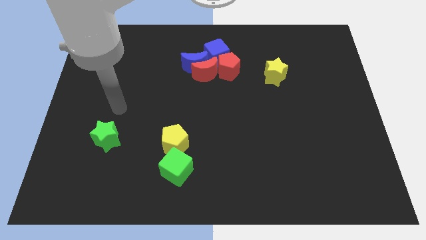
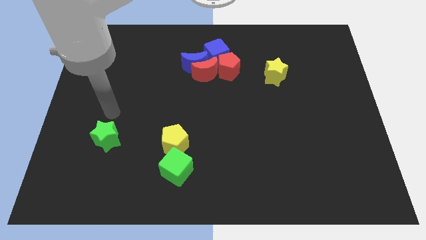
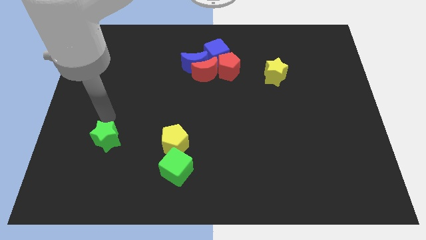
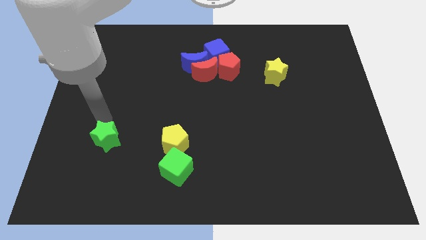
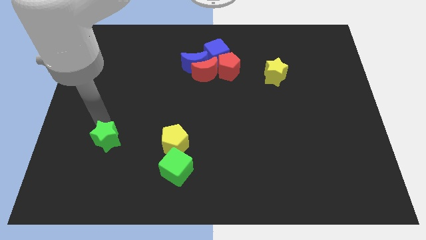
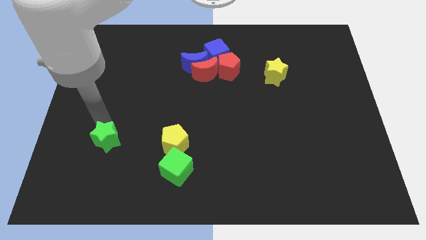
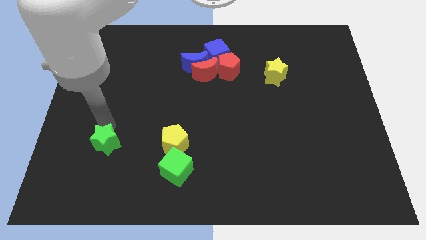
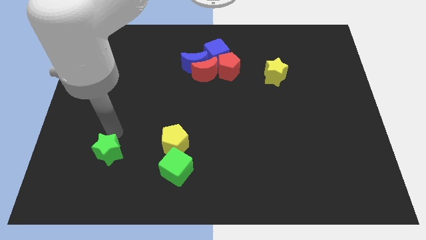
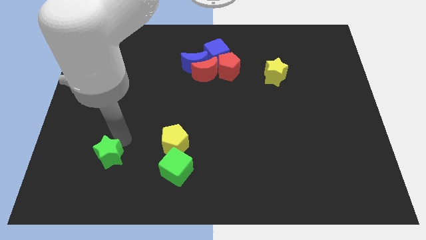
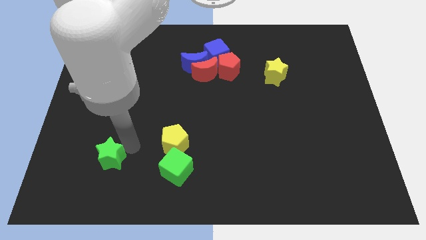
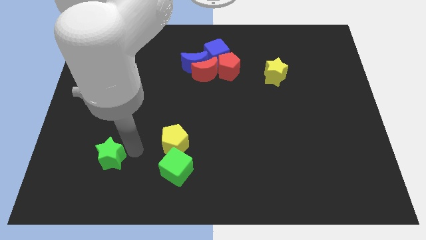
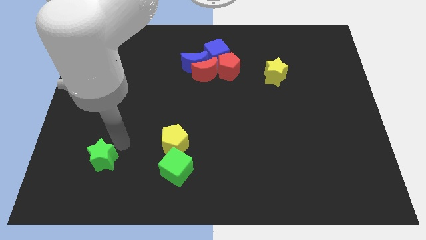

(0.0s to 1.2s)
slightly move the green star towards down of the board

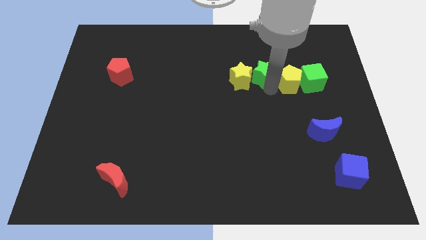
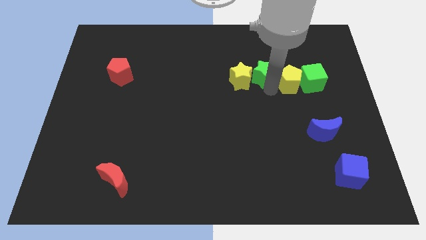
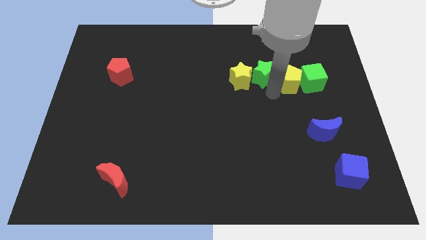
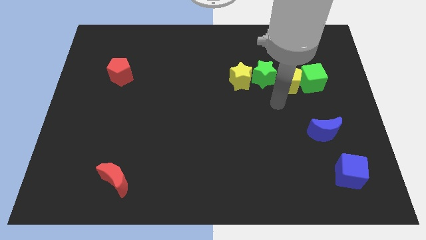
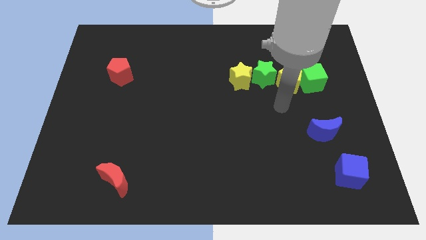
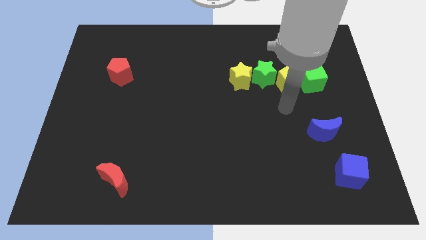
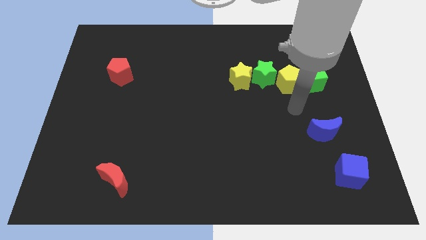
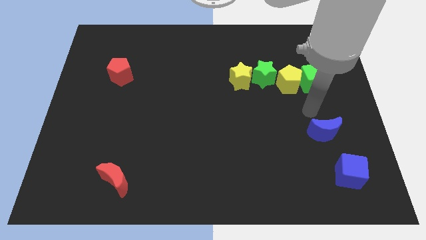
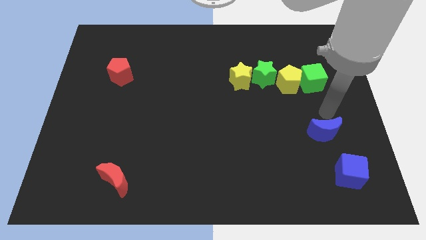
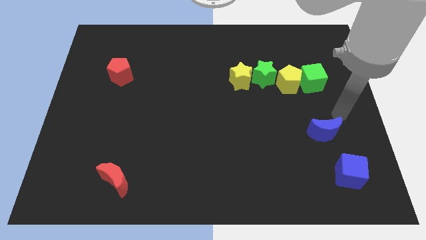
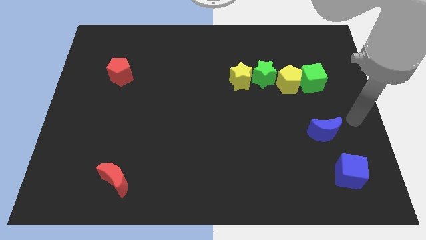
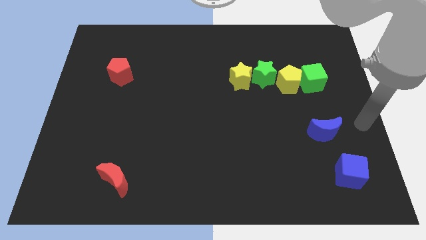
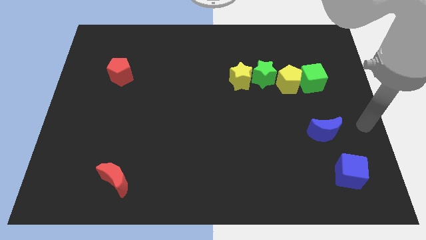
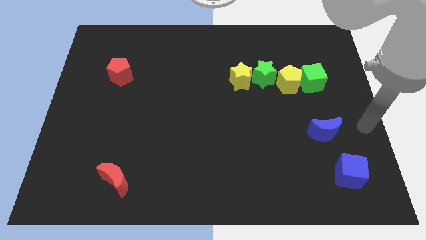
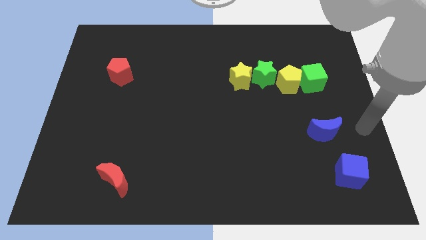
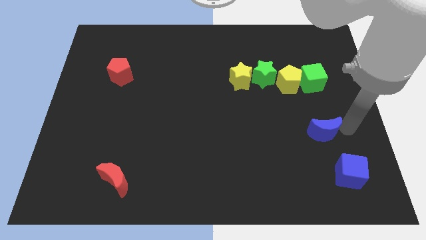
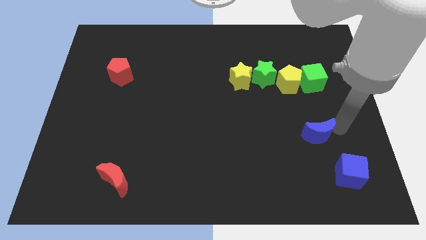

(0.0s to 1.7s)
move your arm away from the green star

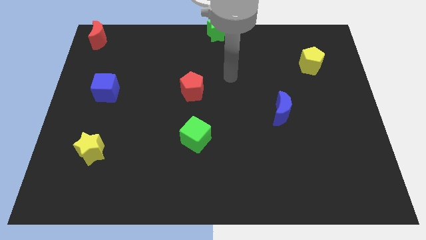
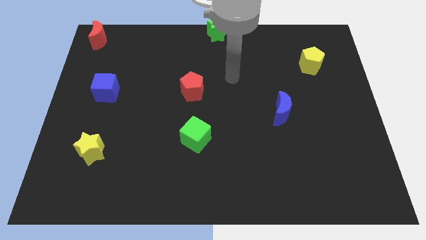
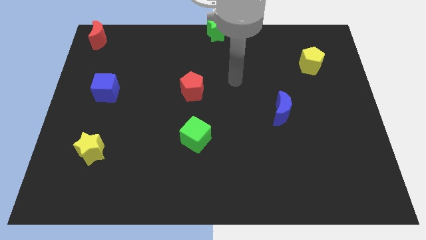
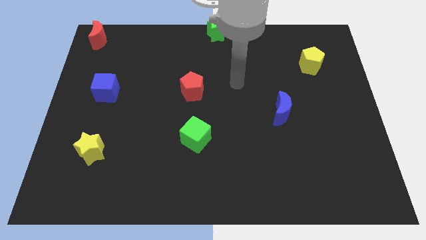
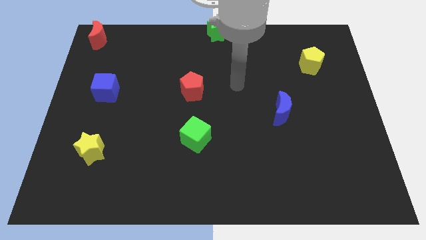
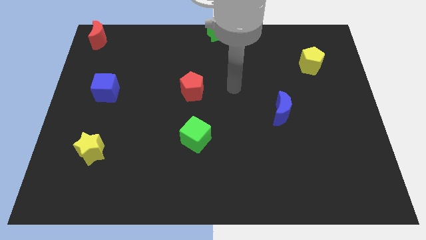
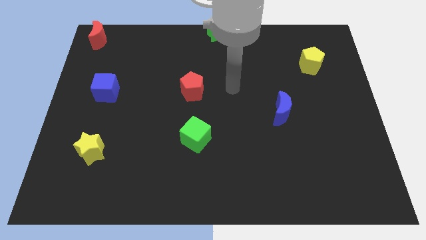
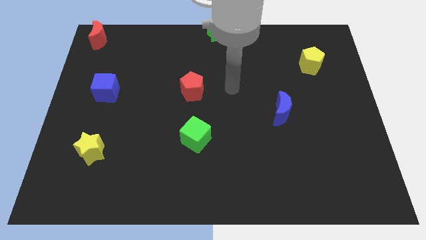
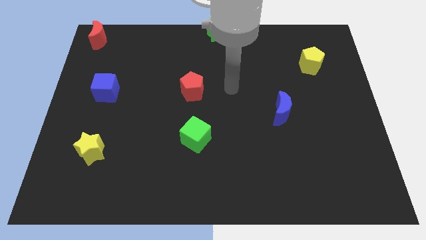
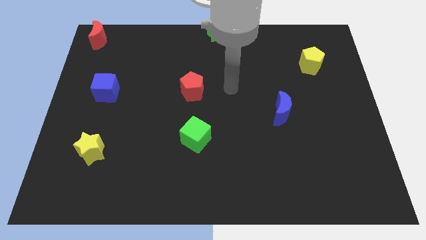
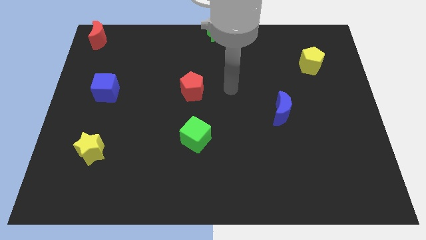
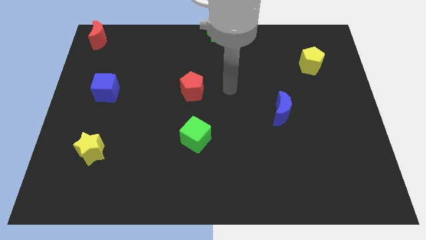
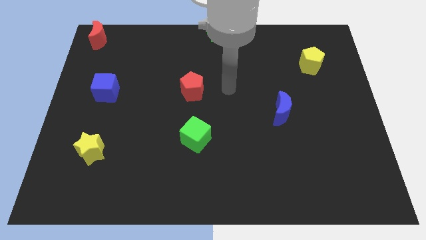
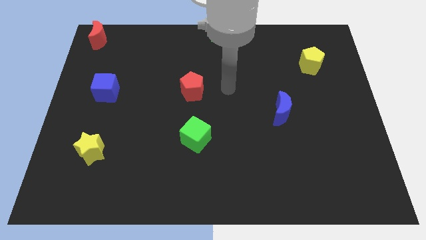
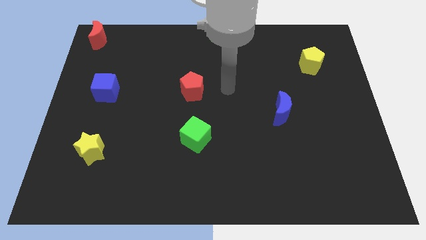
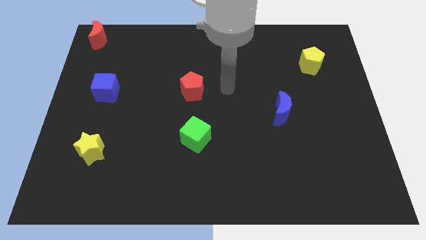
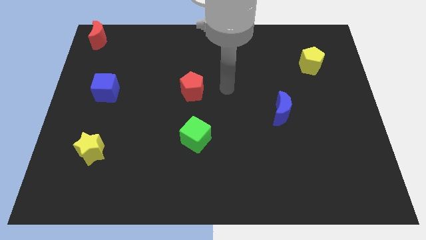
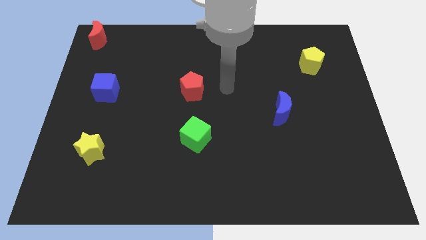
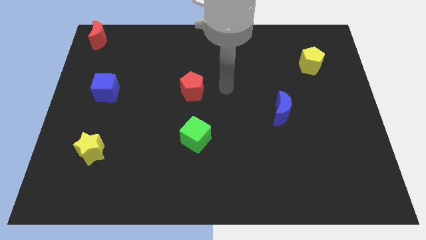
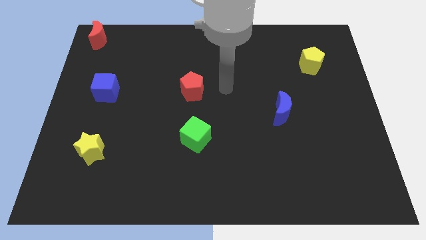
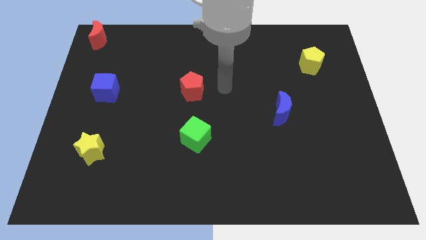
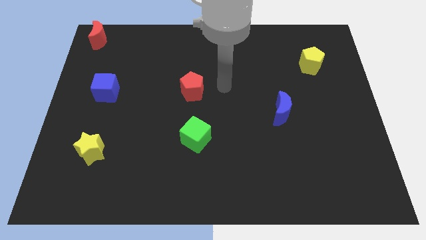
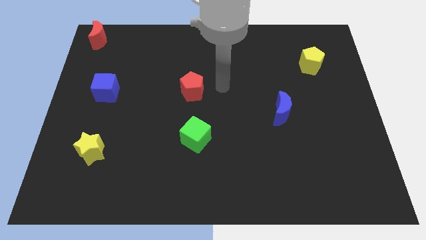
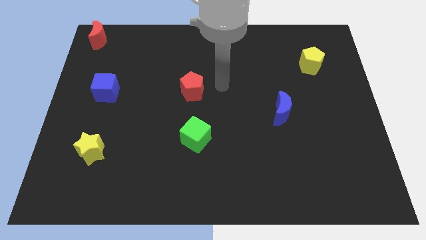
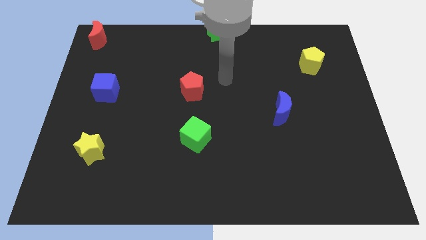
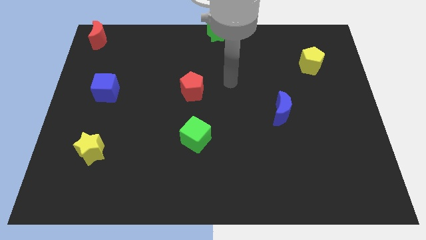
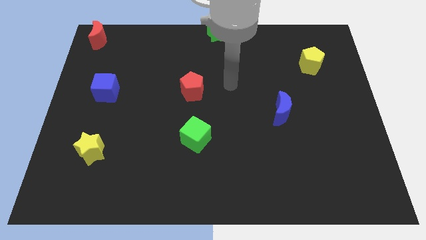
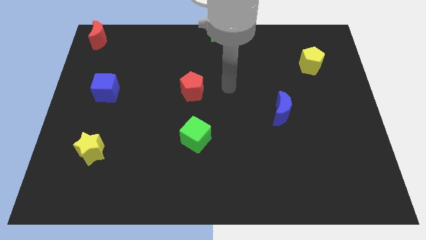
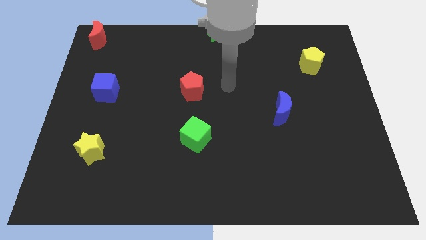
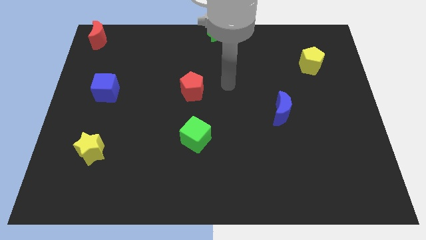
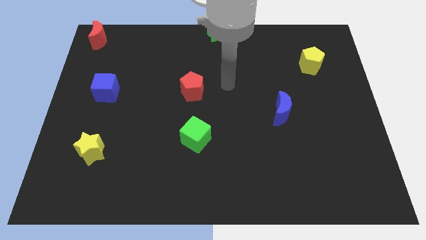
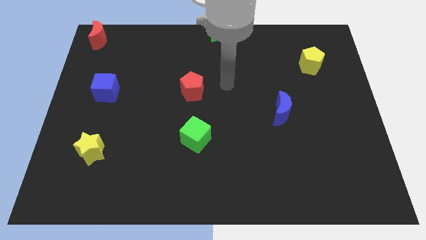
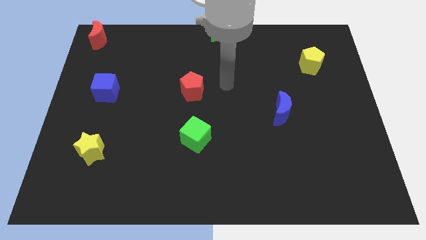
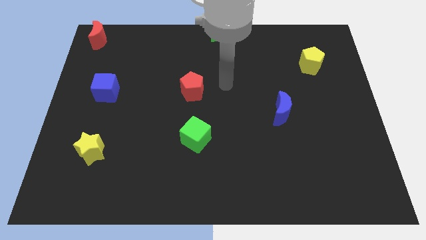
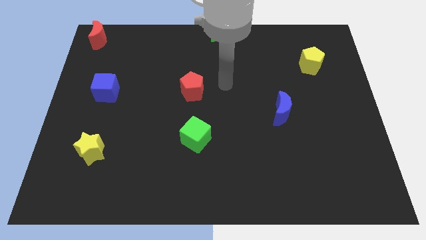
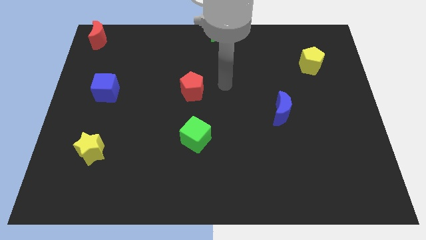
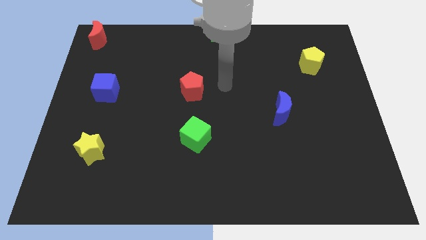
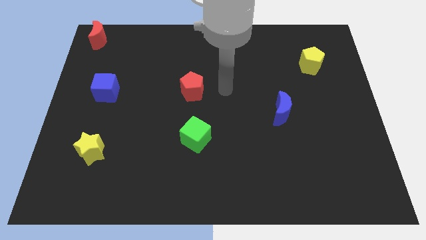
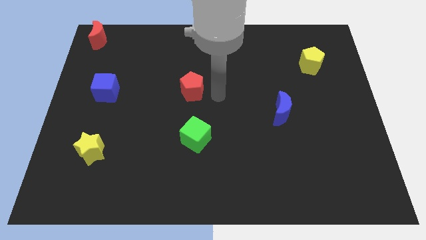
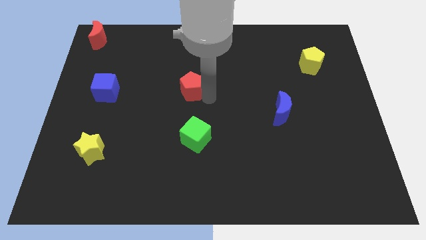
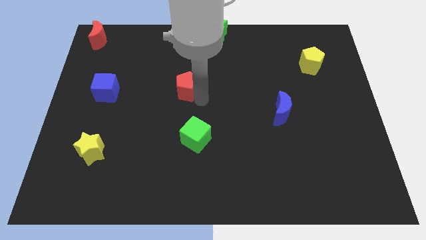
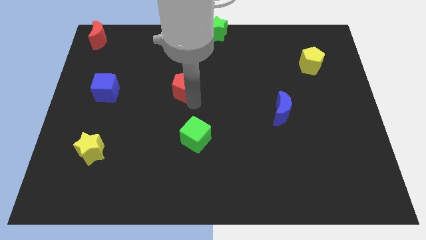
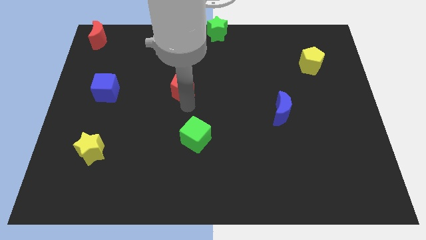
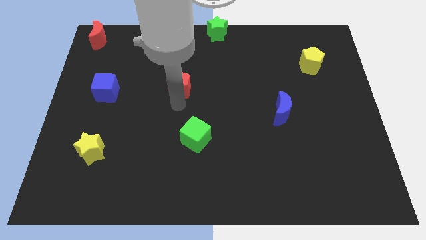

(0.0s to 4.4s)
move the arm into the red pentagon

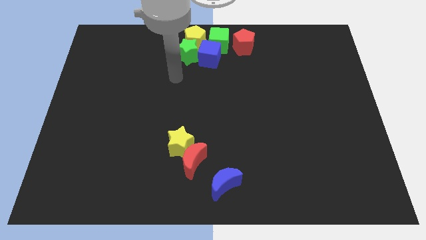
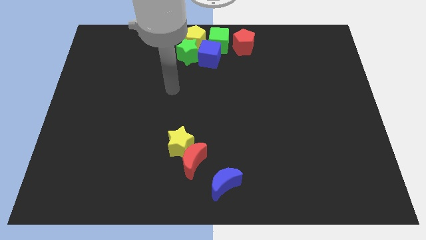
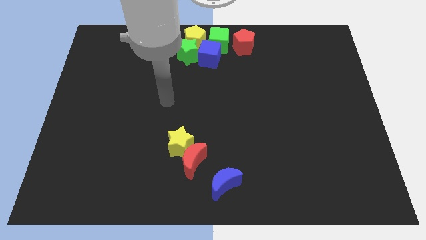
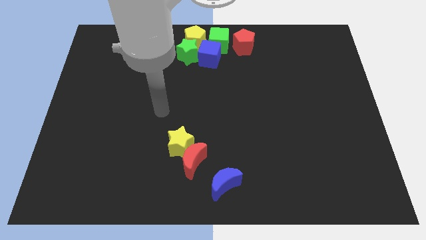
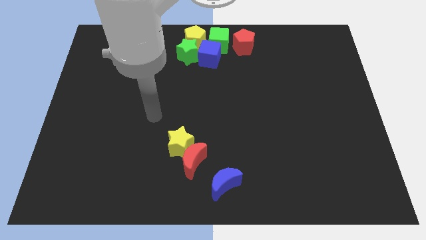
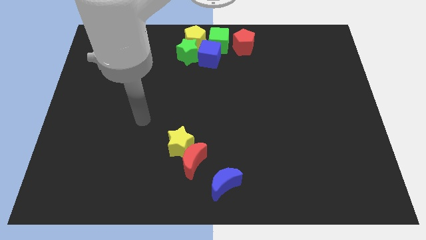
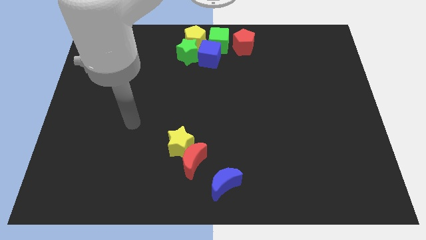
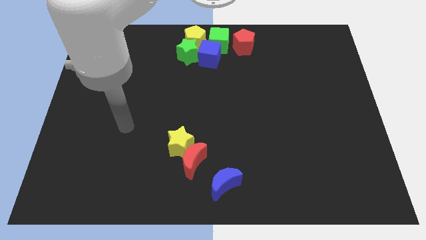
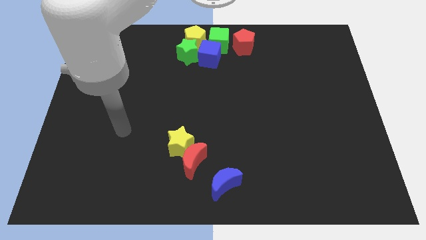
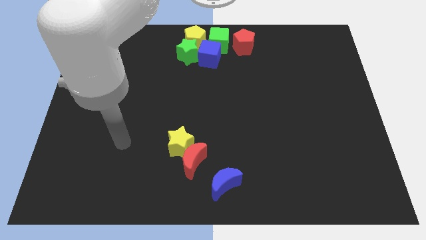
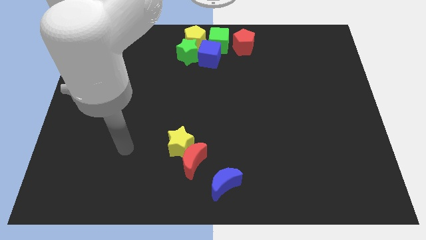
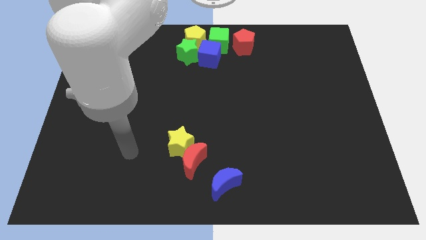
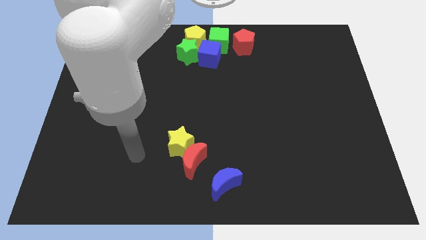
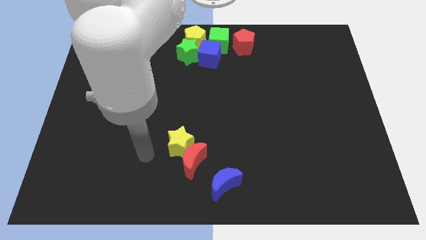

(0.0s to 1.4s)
point the arm to the left of the yellow star

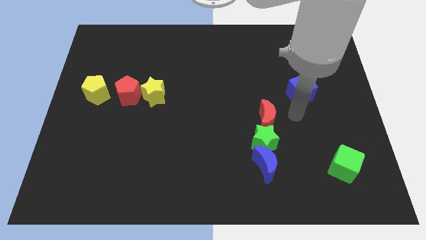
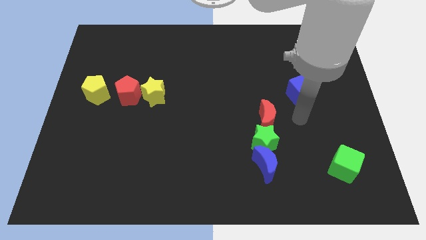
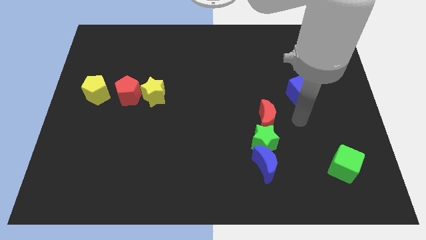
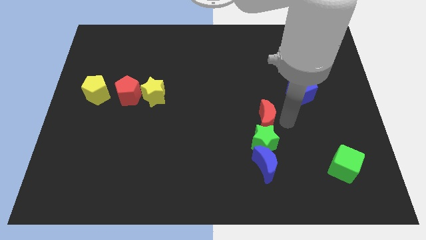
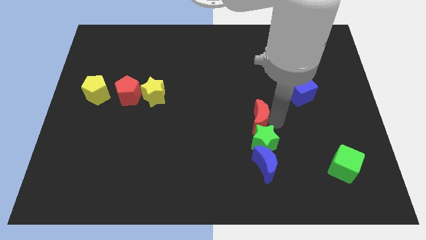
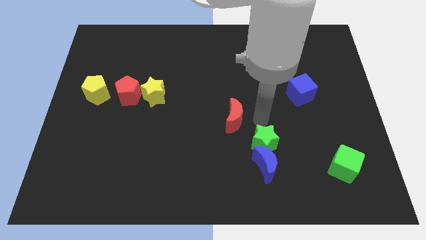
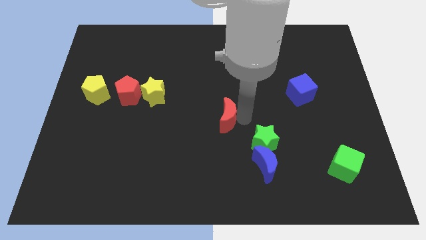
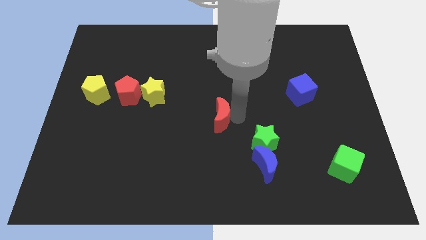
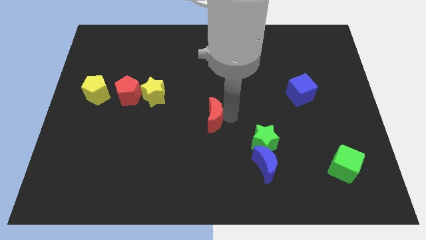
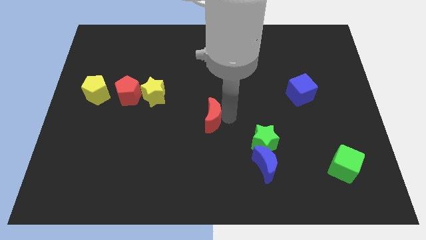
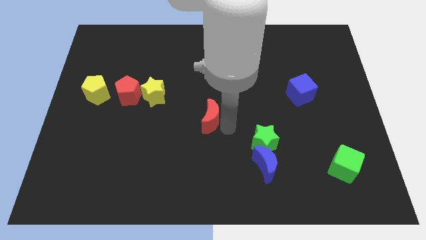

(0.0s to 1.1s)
move the red crescent away from the green star
